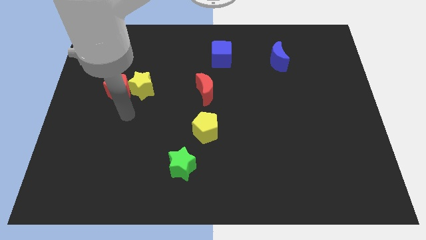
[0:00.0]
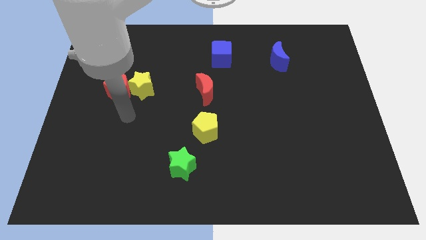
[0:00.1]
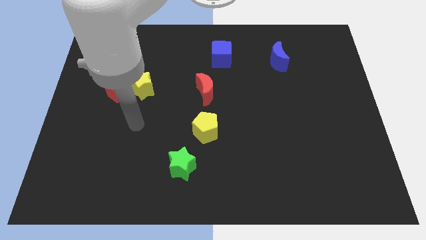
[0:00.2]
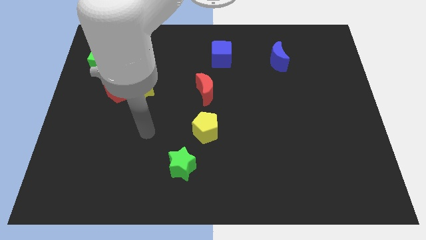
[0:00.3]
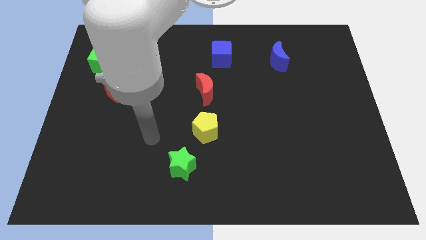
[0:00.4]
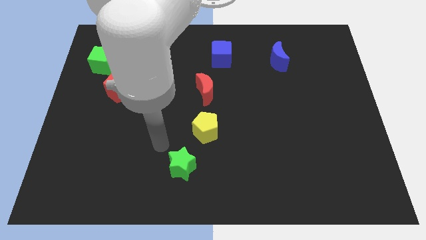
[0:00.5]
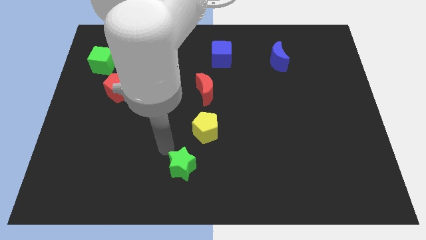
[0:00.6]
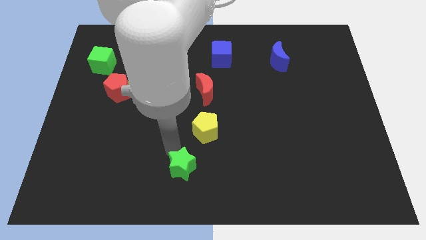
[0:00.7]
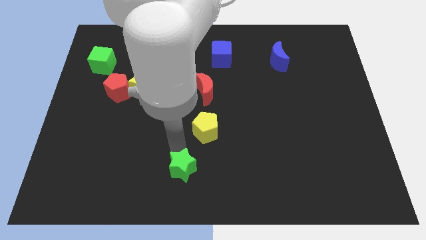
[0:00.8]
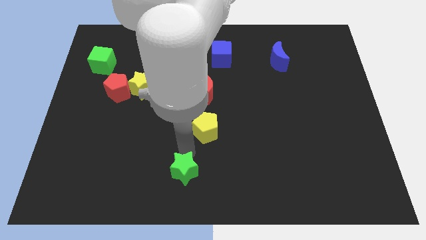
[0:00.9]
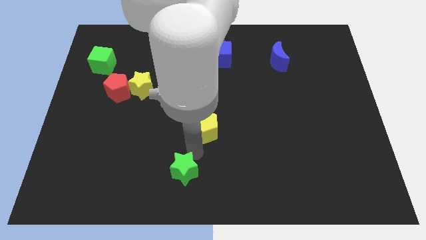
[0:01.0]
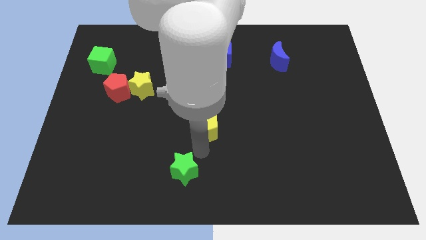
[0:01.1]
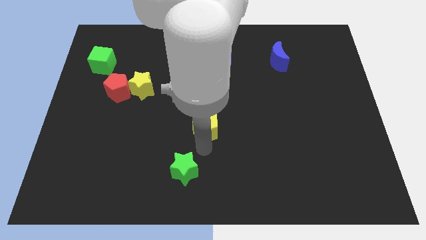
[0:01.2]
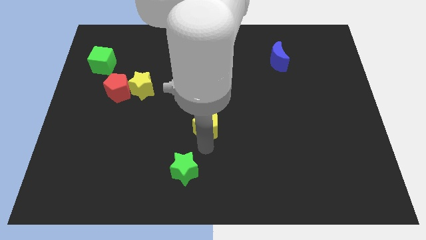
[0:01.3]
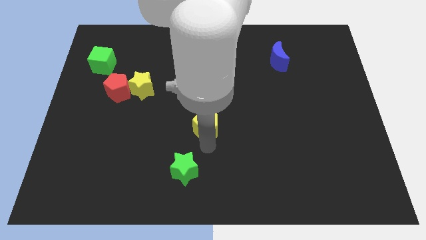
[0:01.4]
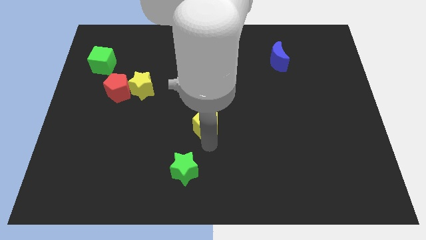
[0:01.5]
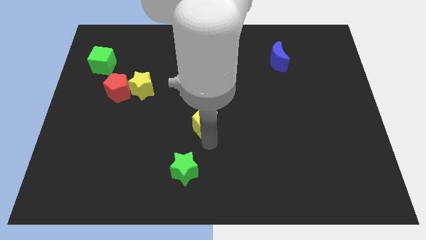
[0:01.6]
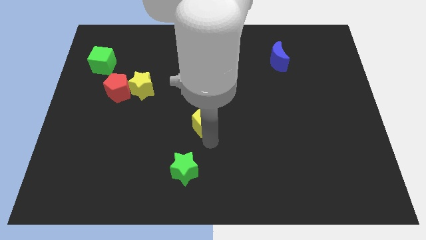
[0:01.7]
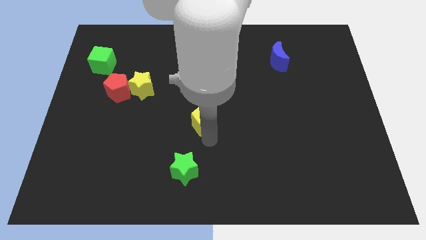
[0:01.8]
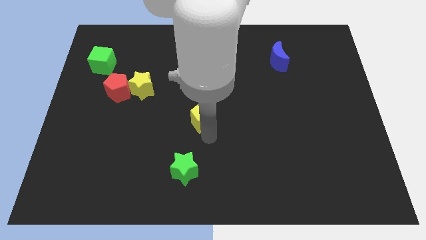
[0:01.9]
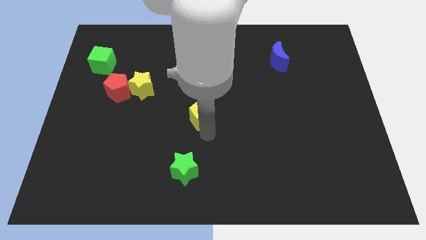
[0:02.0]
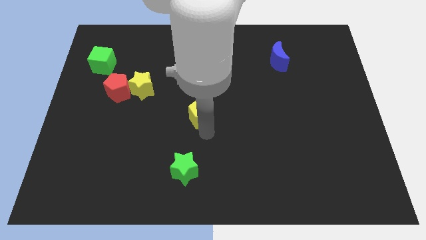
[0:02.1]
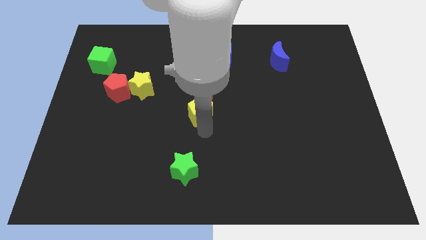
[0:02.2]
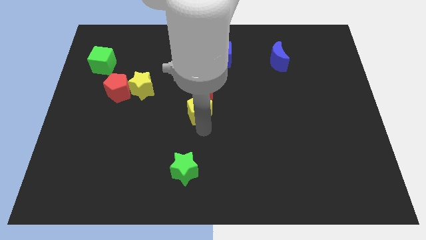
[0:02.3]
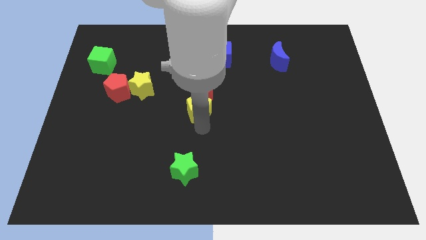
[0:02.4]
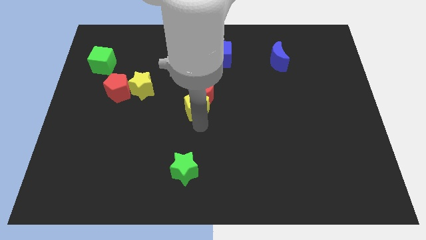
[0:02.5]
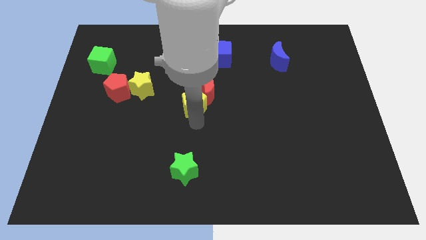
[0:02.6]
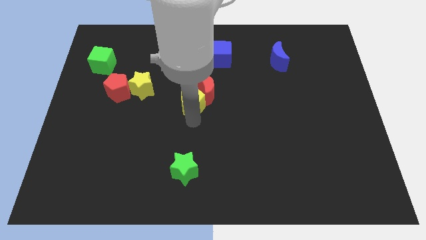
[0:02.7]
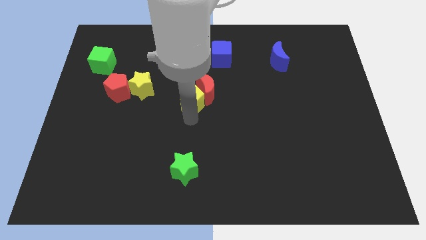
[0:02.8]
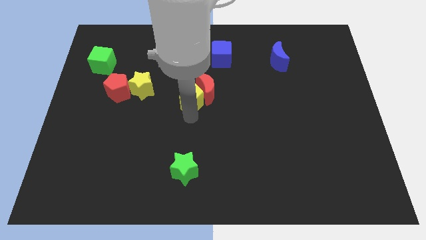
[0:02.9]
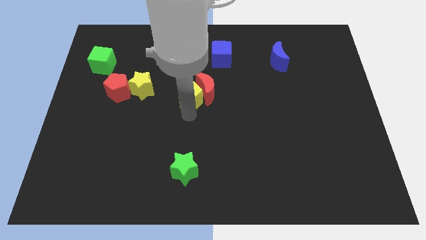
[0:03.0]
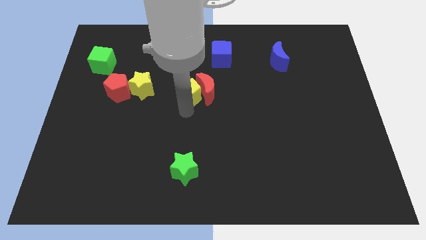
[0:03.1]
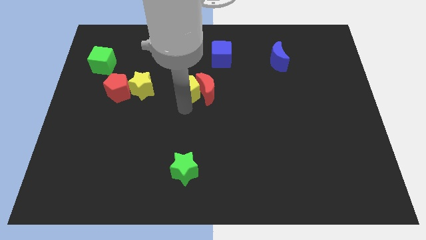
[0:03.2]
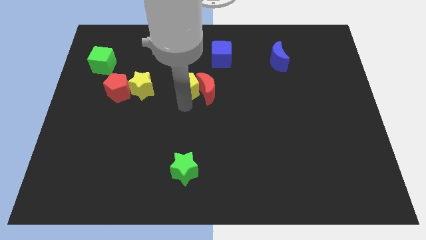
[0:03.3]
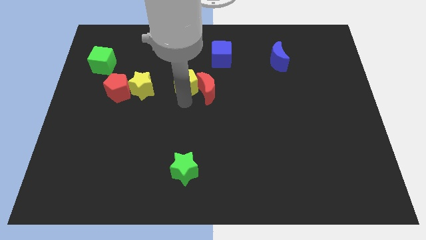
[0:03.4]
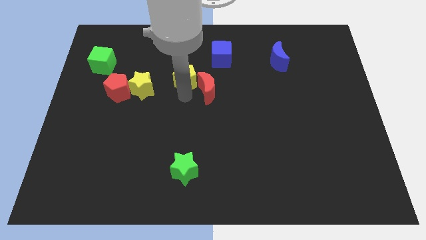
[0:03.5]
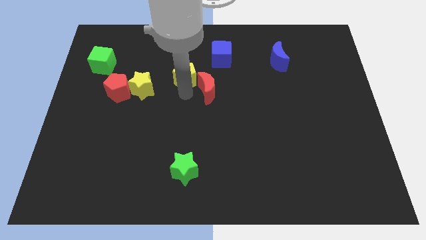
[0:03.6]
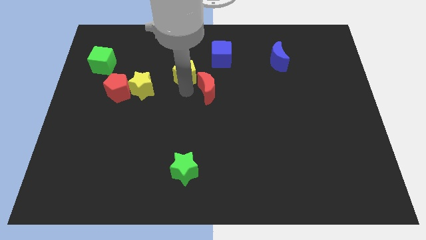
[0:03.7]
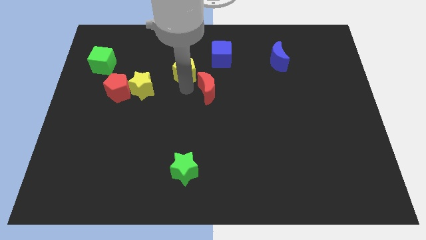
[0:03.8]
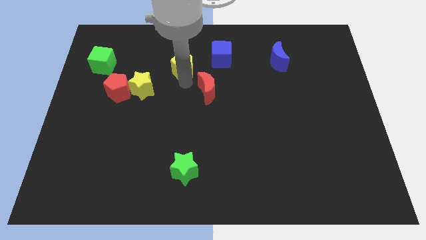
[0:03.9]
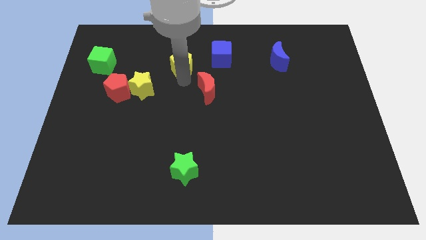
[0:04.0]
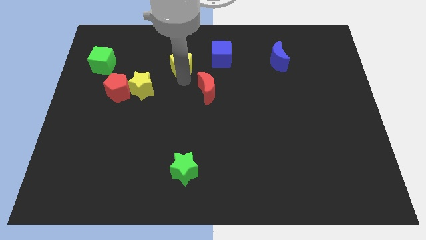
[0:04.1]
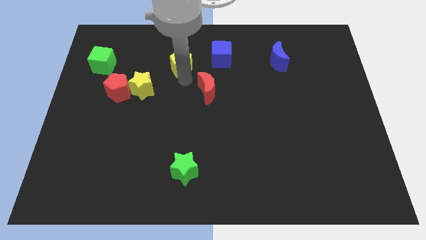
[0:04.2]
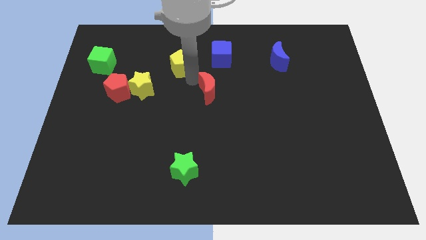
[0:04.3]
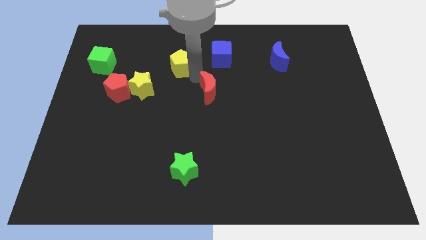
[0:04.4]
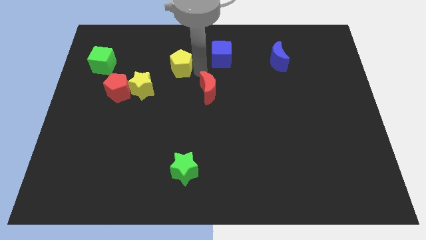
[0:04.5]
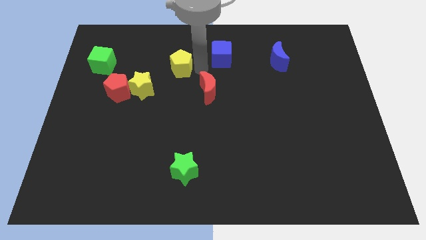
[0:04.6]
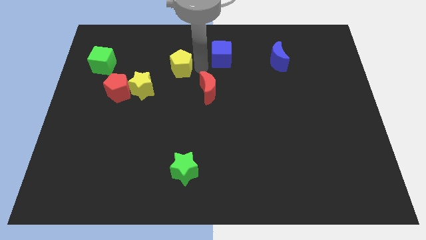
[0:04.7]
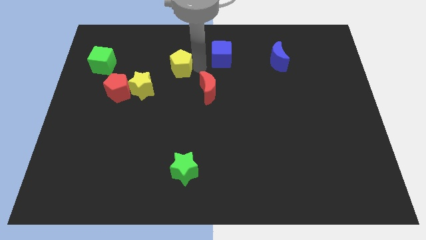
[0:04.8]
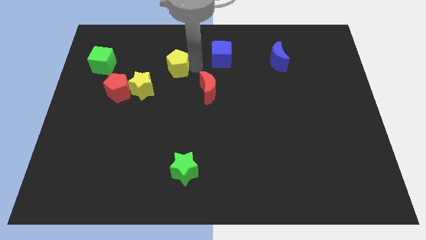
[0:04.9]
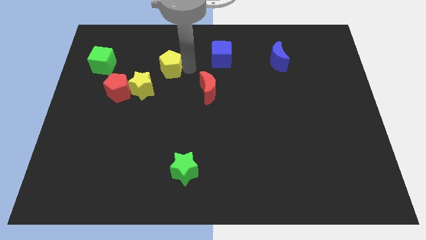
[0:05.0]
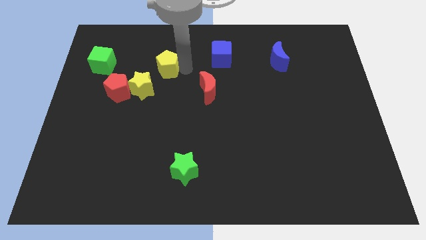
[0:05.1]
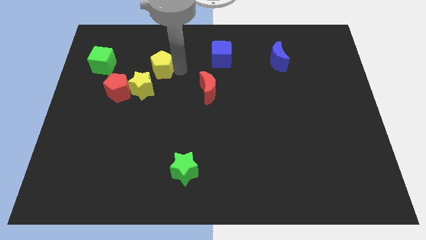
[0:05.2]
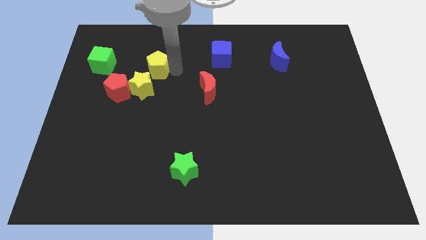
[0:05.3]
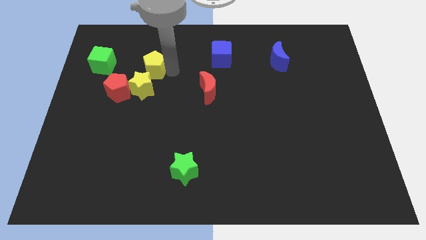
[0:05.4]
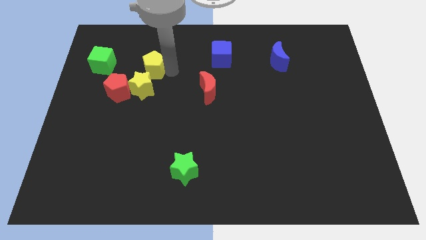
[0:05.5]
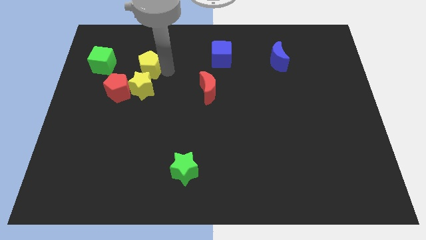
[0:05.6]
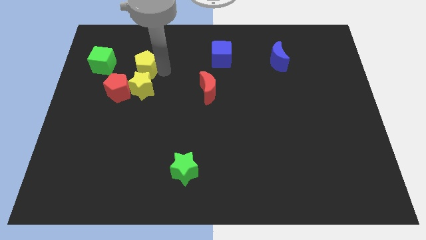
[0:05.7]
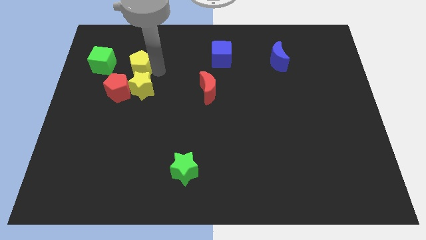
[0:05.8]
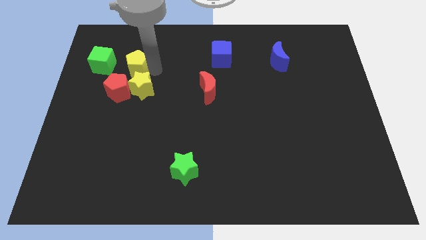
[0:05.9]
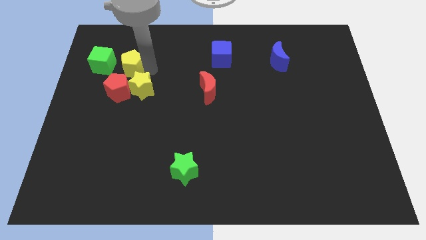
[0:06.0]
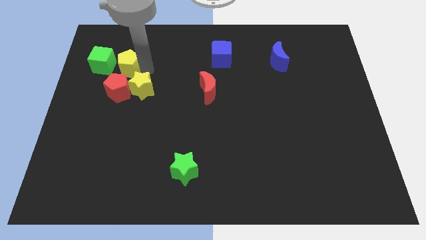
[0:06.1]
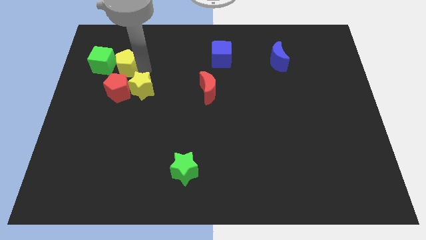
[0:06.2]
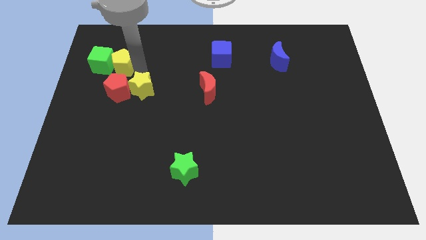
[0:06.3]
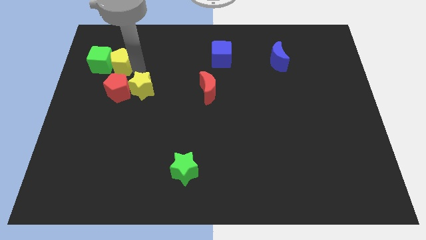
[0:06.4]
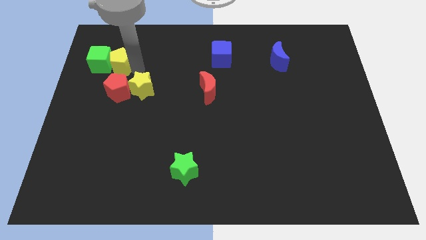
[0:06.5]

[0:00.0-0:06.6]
slide the yellow pentagon close to the green cube

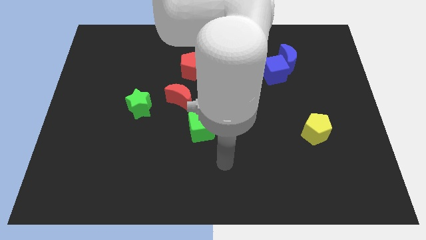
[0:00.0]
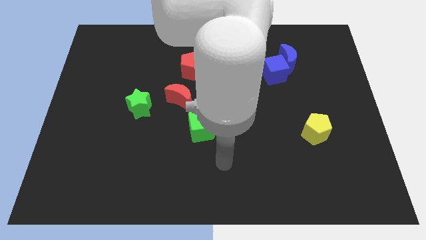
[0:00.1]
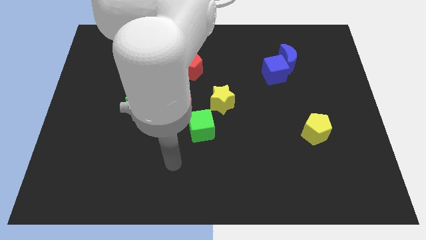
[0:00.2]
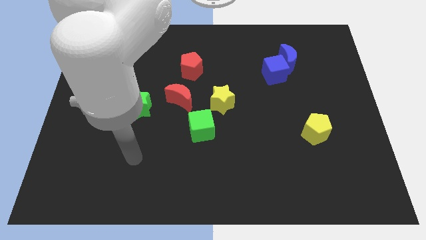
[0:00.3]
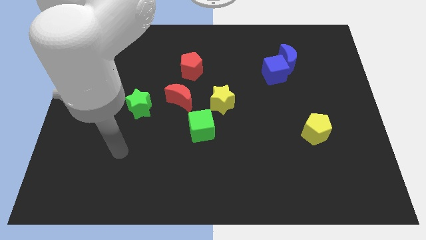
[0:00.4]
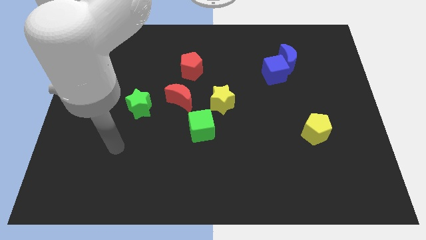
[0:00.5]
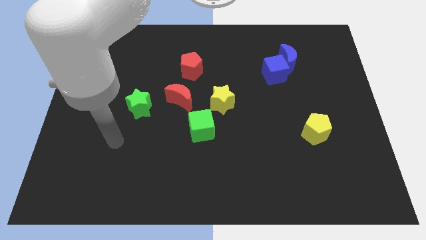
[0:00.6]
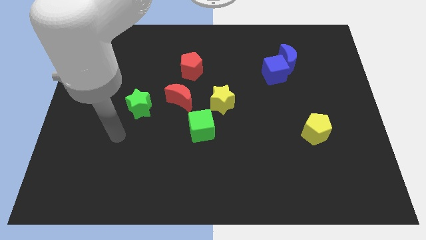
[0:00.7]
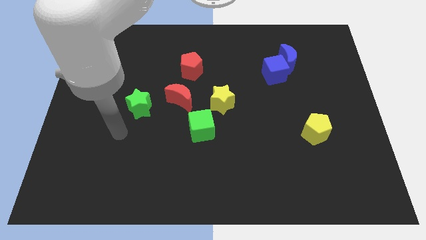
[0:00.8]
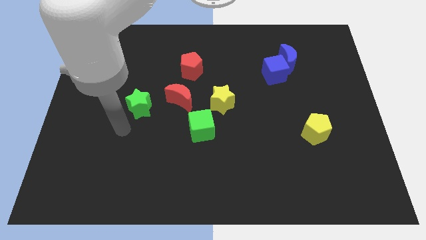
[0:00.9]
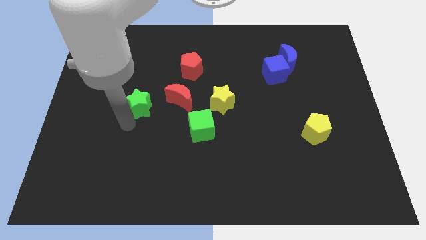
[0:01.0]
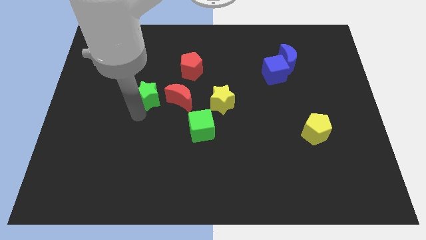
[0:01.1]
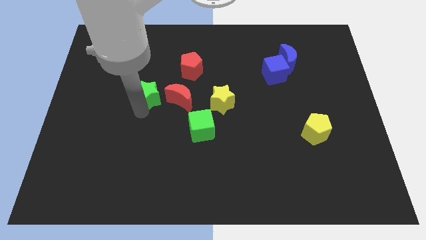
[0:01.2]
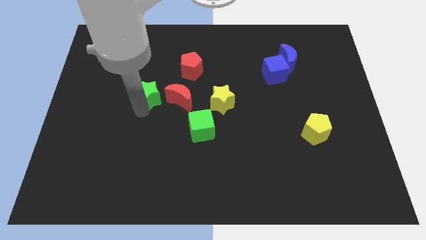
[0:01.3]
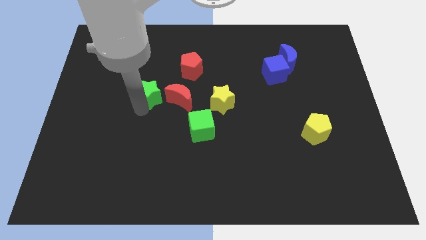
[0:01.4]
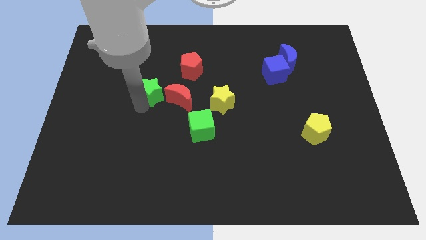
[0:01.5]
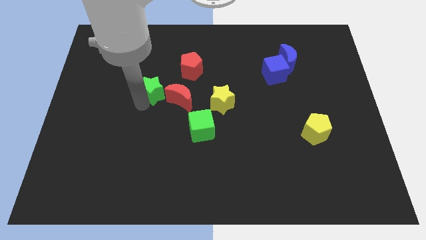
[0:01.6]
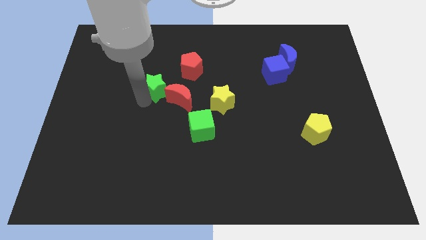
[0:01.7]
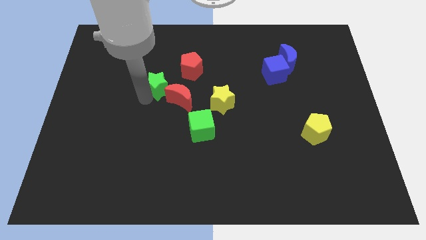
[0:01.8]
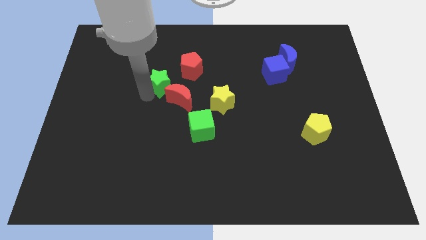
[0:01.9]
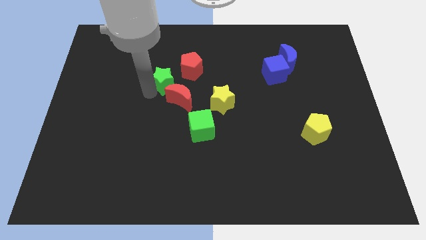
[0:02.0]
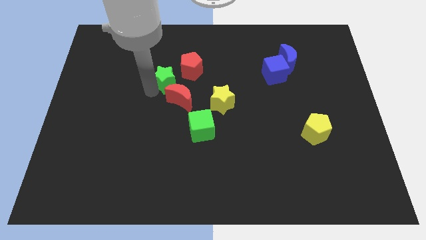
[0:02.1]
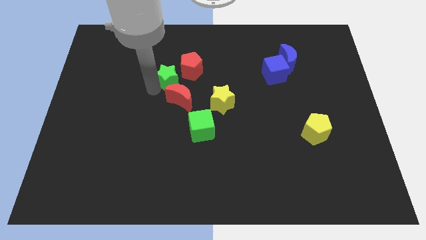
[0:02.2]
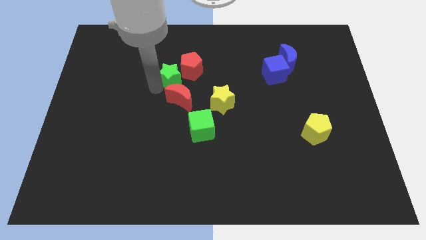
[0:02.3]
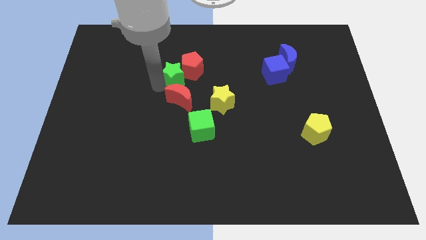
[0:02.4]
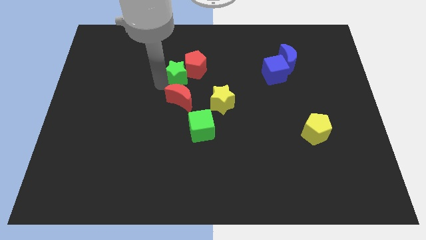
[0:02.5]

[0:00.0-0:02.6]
put the green star next to the red pentagon
